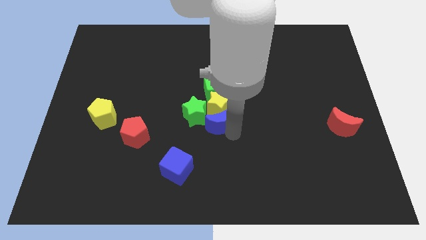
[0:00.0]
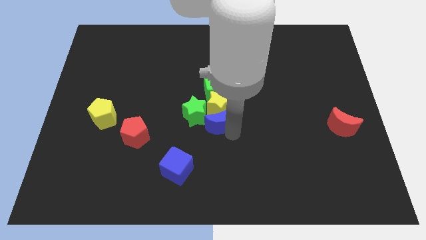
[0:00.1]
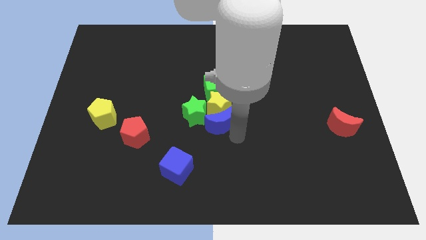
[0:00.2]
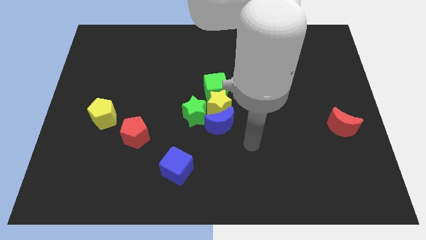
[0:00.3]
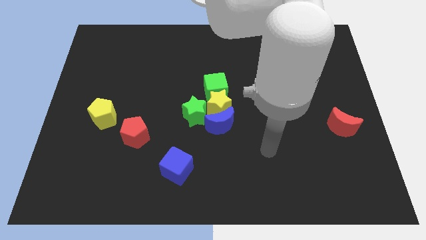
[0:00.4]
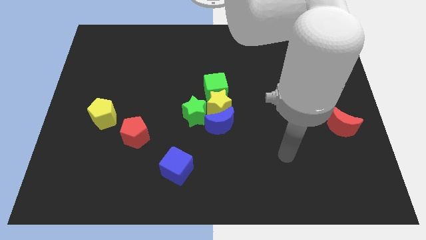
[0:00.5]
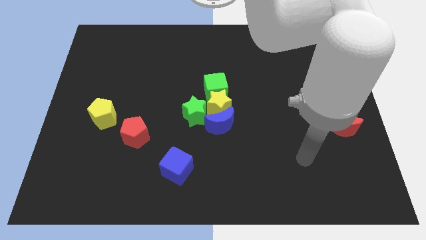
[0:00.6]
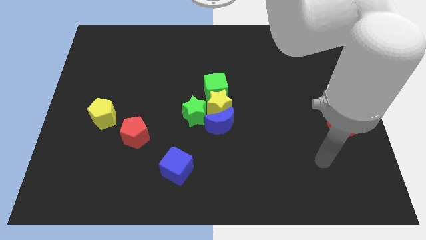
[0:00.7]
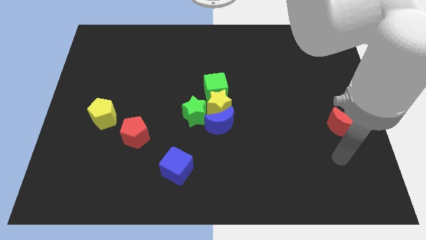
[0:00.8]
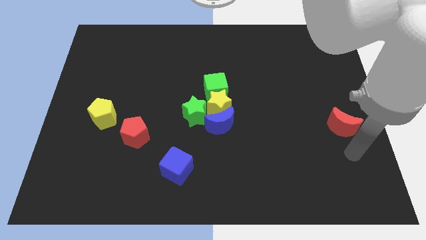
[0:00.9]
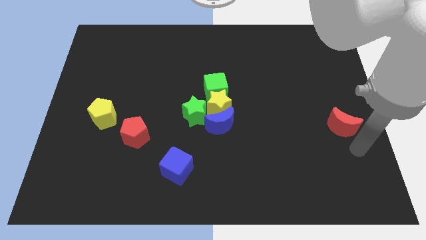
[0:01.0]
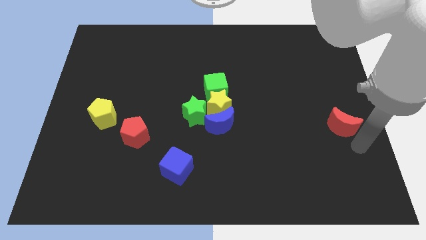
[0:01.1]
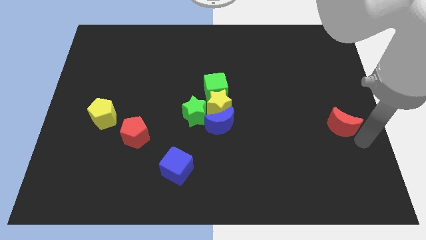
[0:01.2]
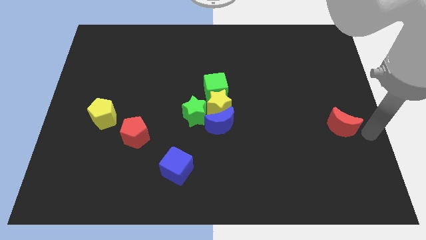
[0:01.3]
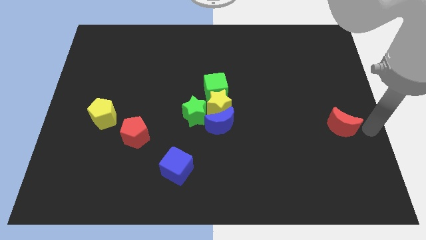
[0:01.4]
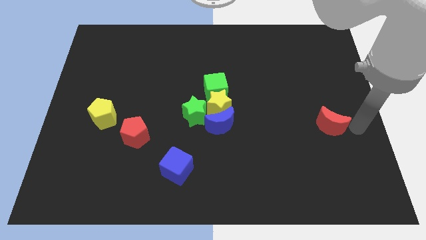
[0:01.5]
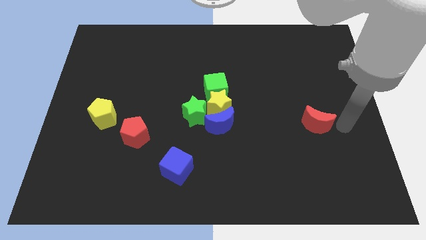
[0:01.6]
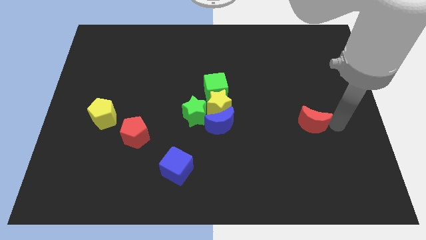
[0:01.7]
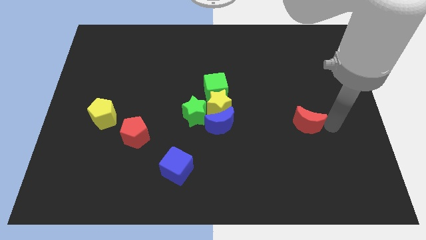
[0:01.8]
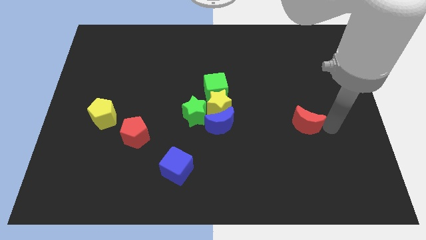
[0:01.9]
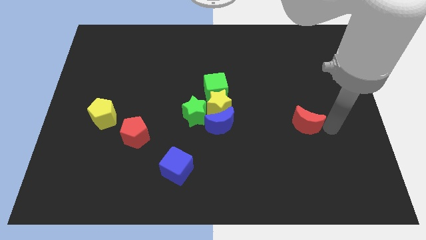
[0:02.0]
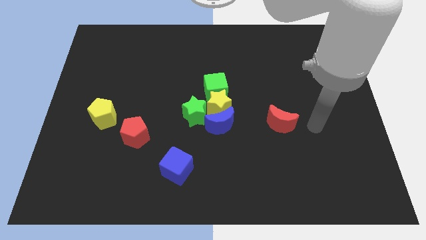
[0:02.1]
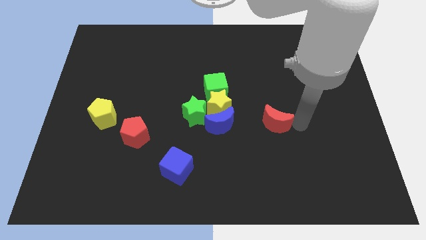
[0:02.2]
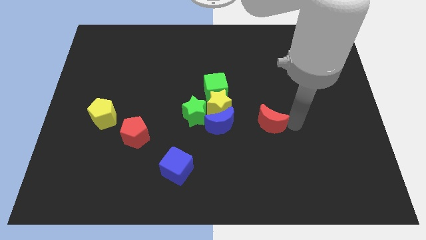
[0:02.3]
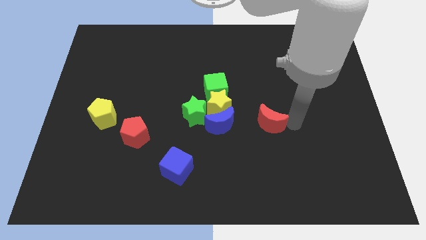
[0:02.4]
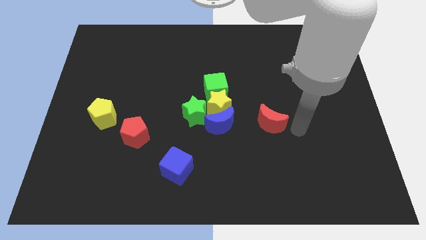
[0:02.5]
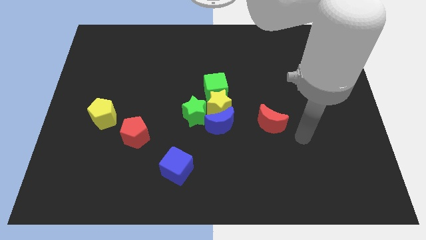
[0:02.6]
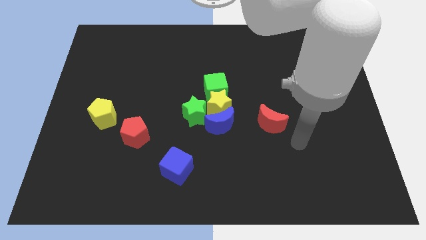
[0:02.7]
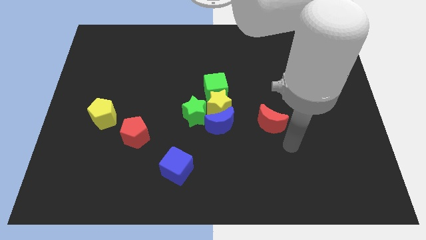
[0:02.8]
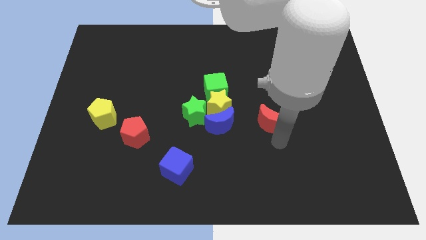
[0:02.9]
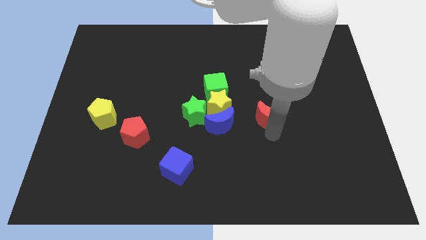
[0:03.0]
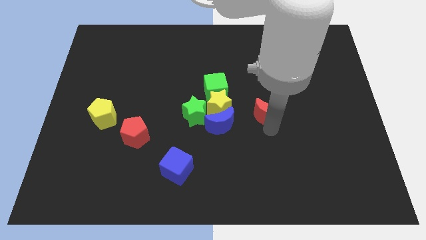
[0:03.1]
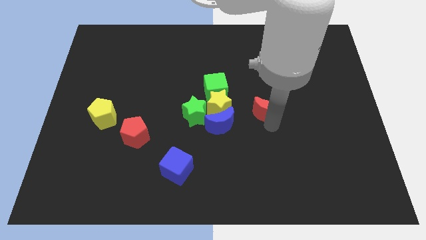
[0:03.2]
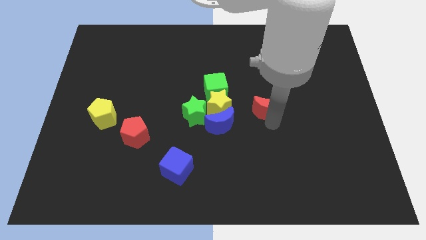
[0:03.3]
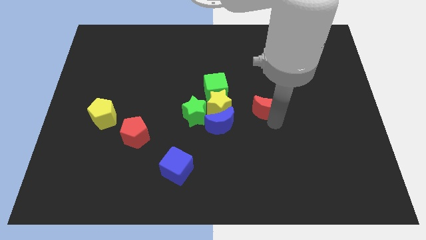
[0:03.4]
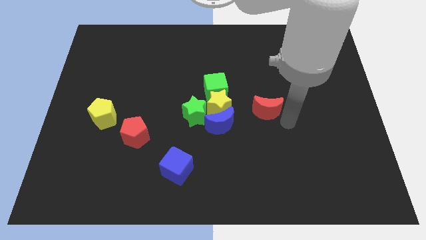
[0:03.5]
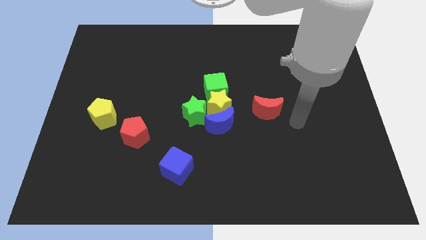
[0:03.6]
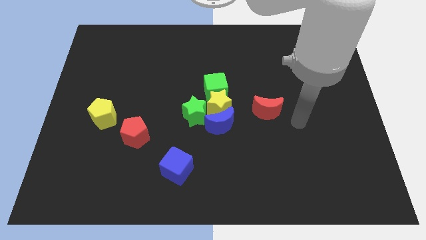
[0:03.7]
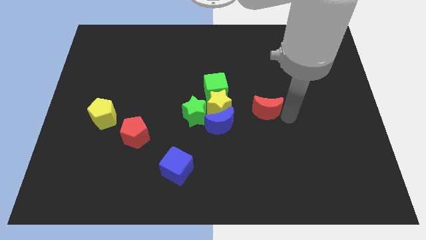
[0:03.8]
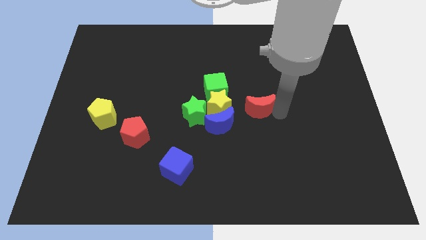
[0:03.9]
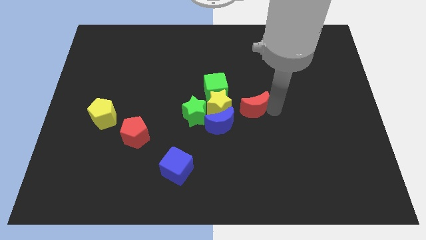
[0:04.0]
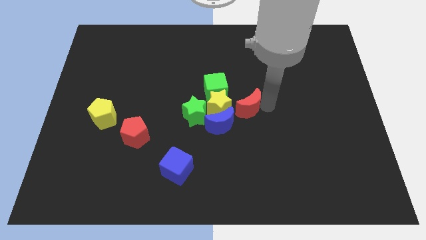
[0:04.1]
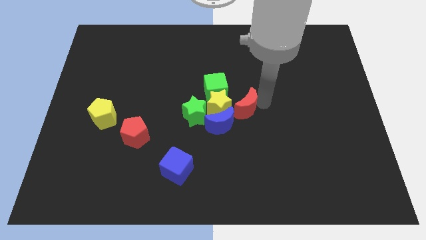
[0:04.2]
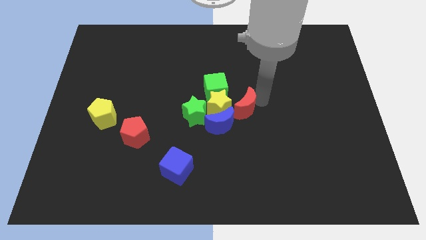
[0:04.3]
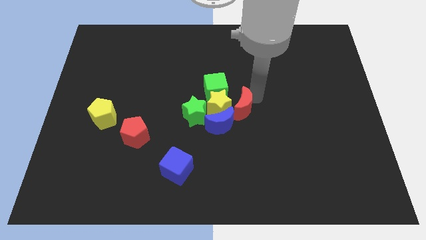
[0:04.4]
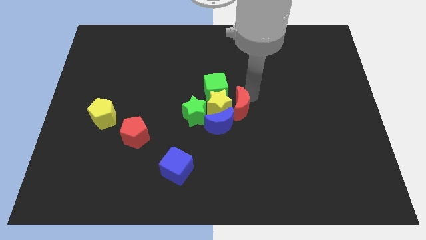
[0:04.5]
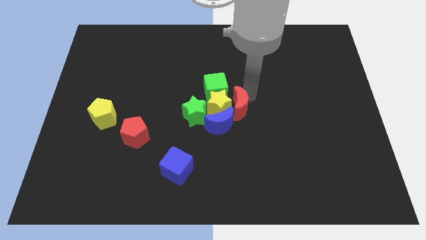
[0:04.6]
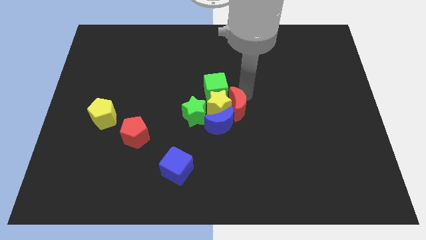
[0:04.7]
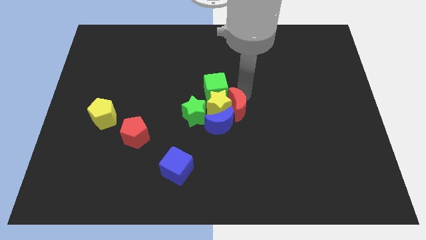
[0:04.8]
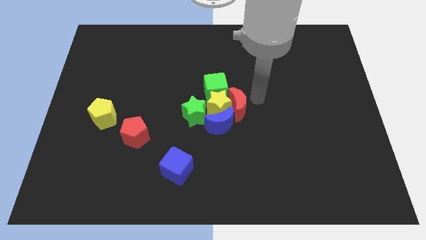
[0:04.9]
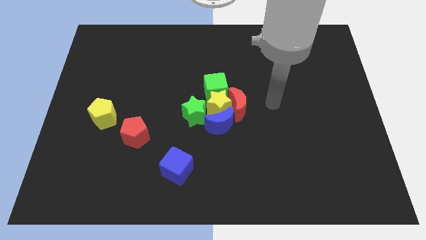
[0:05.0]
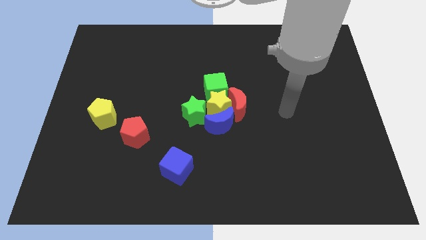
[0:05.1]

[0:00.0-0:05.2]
push the red moon close to the group of blocks

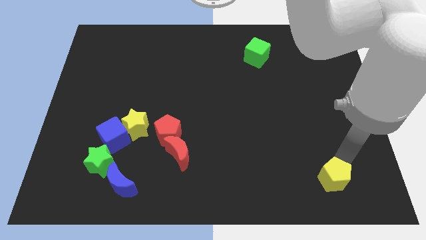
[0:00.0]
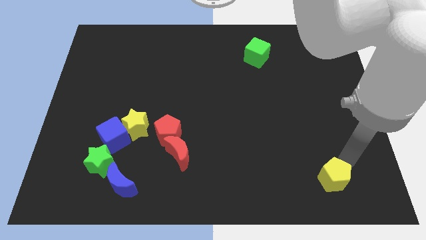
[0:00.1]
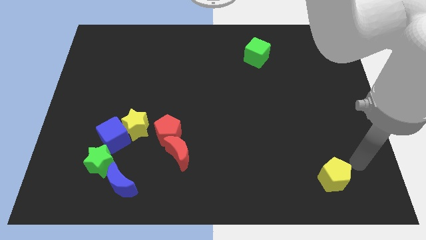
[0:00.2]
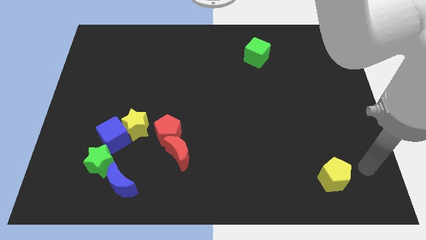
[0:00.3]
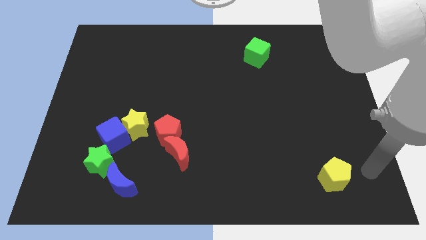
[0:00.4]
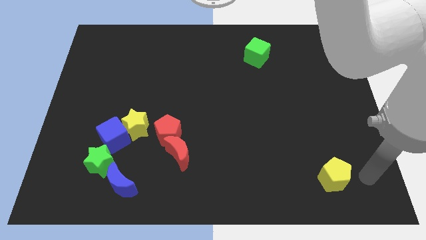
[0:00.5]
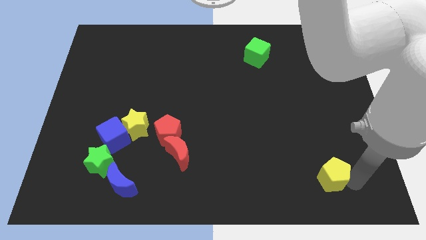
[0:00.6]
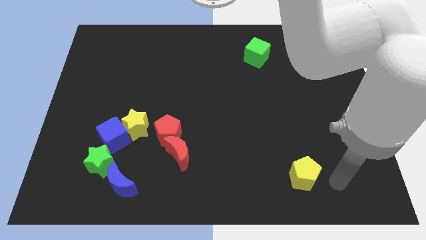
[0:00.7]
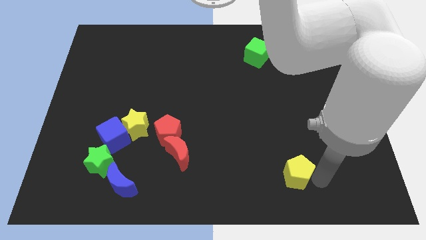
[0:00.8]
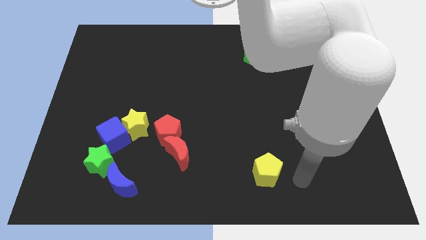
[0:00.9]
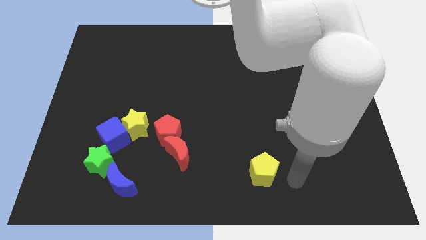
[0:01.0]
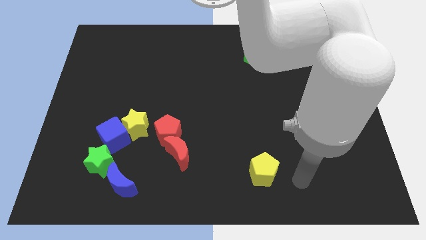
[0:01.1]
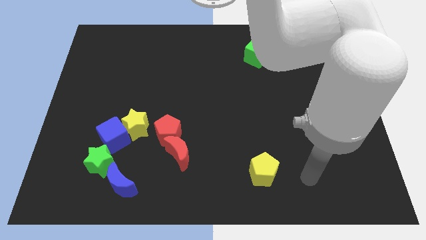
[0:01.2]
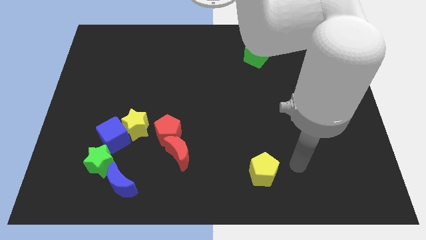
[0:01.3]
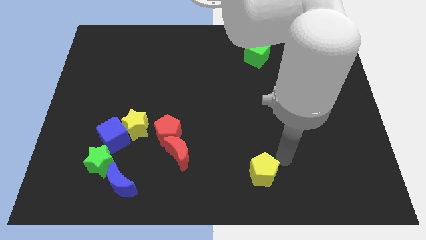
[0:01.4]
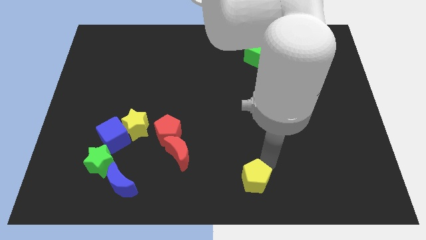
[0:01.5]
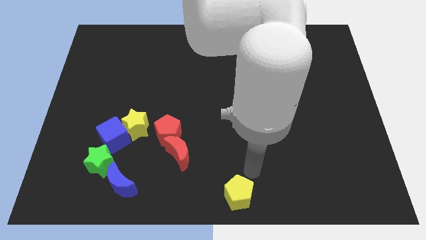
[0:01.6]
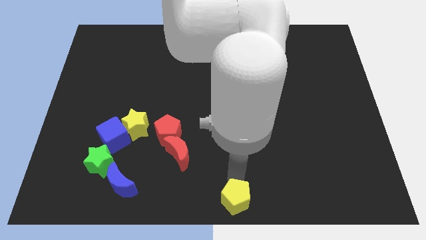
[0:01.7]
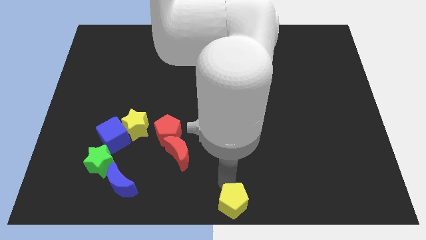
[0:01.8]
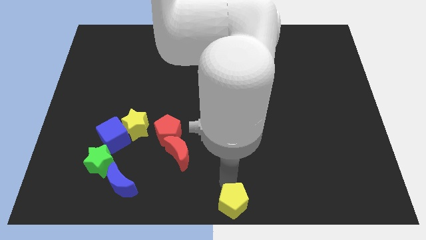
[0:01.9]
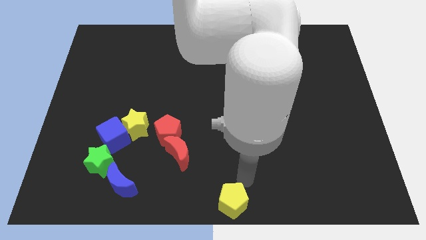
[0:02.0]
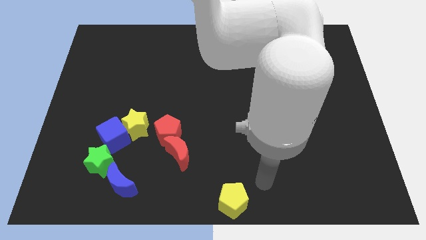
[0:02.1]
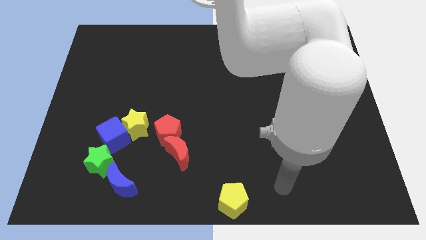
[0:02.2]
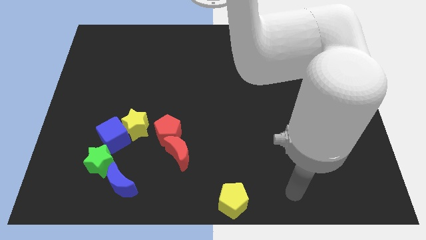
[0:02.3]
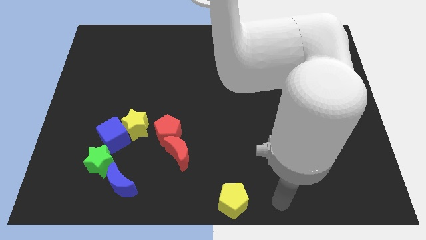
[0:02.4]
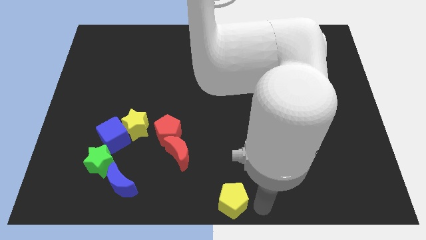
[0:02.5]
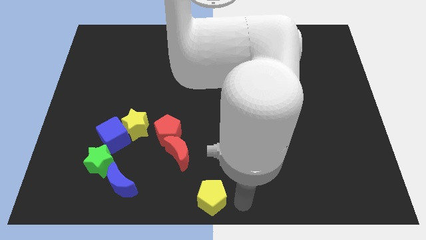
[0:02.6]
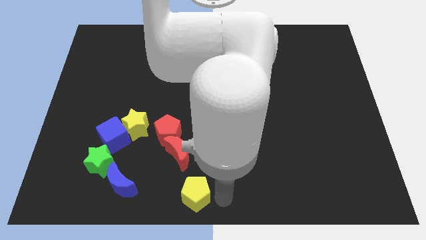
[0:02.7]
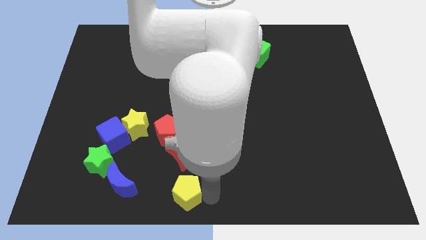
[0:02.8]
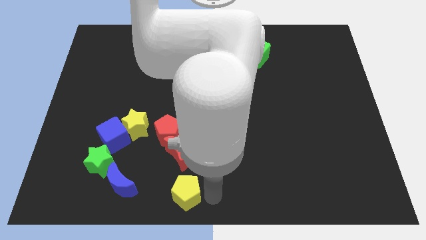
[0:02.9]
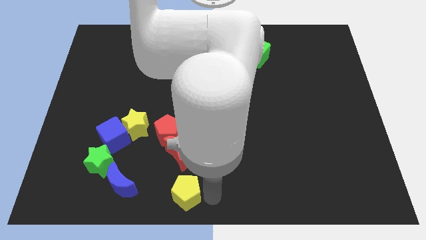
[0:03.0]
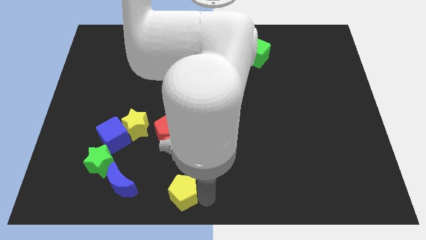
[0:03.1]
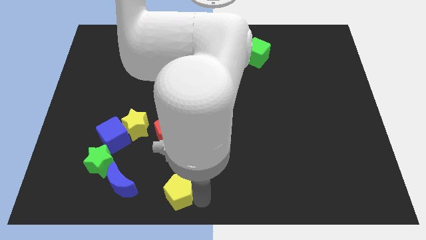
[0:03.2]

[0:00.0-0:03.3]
push the yellow pentagon to the bottom side of the red crescent

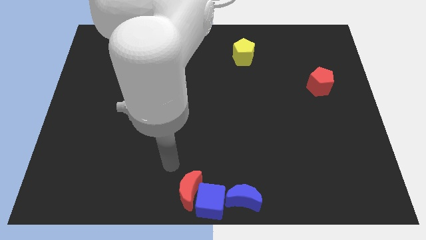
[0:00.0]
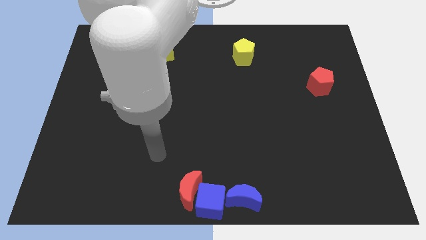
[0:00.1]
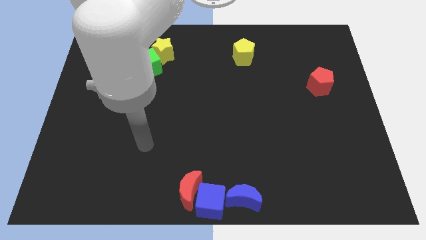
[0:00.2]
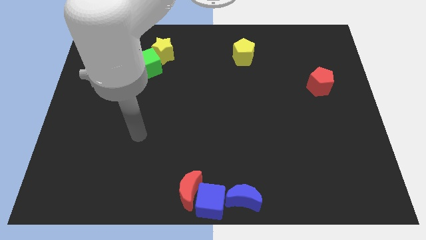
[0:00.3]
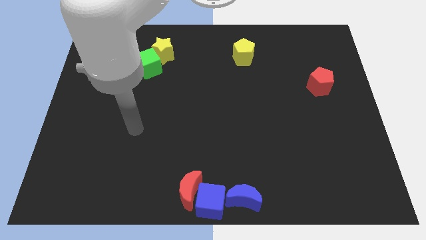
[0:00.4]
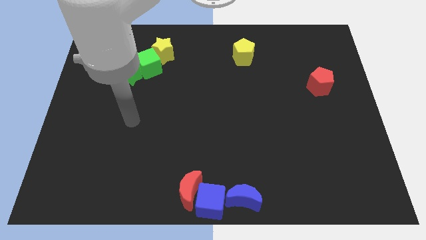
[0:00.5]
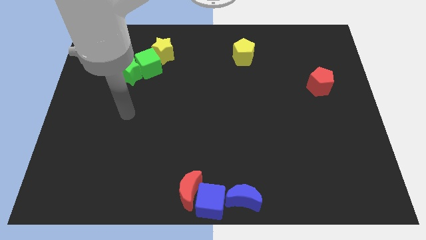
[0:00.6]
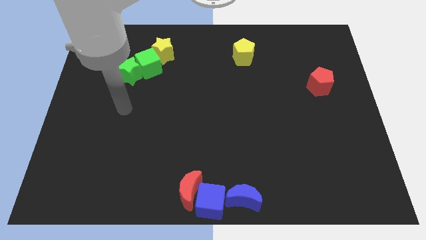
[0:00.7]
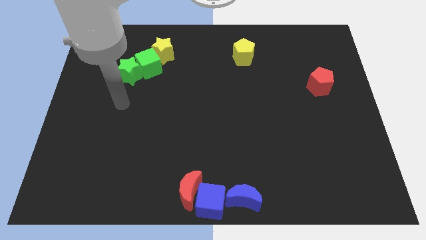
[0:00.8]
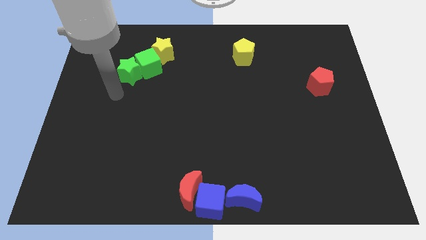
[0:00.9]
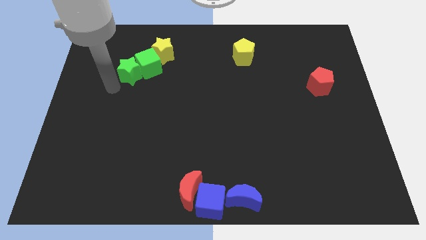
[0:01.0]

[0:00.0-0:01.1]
move your arm away from the red crescent
